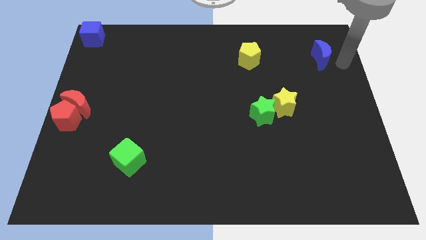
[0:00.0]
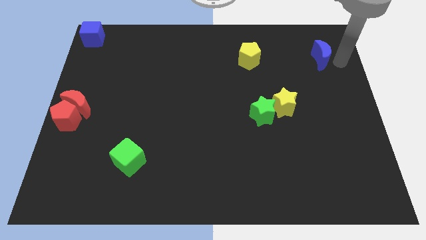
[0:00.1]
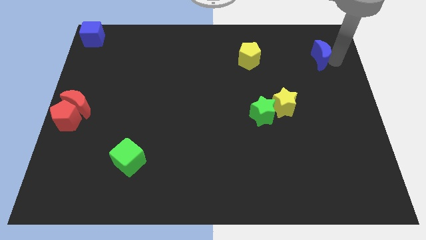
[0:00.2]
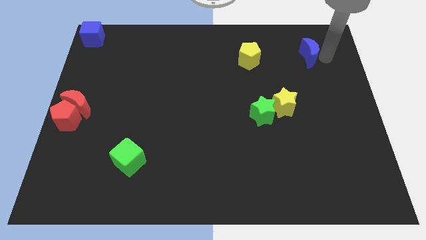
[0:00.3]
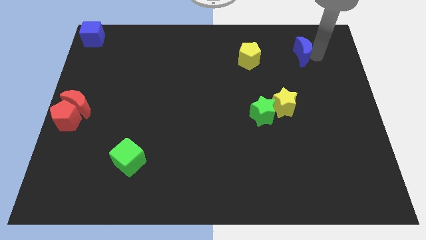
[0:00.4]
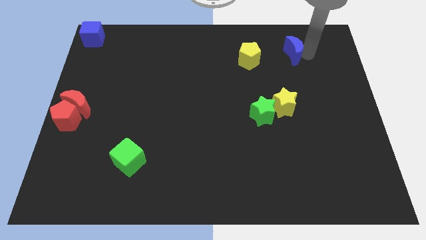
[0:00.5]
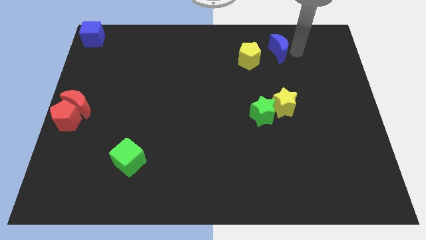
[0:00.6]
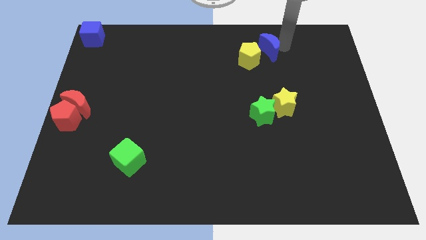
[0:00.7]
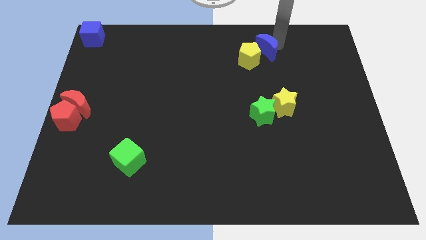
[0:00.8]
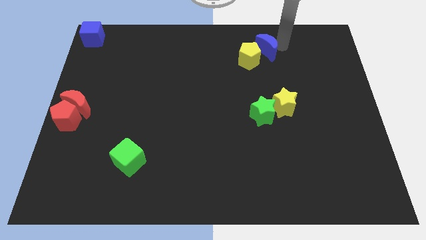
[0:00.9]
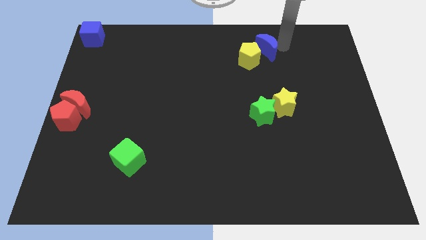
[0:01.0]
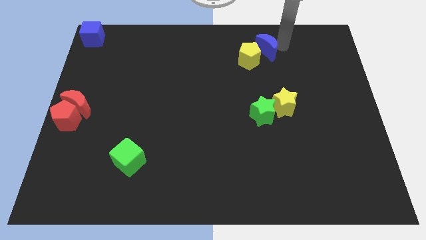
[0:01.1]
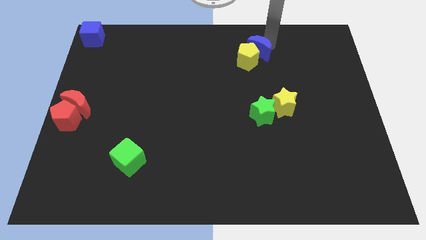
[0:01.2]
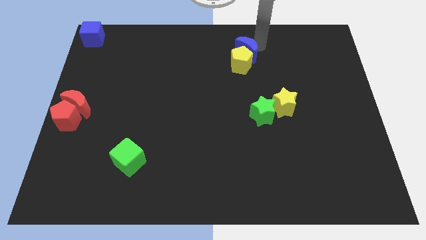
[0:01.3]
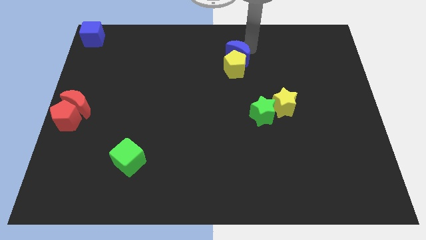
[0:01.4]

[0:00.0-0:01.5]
push the blue moon into the yellow pentagon

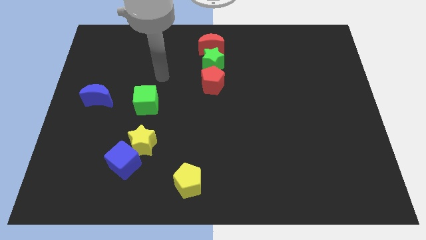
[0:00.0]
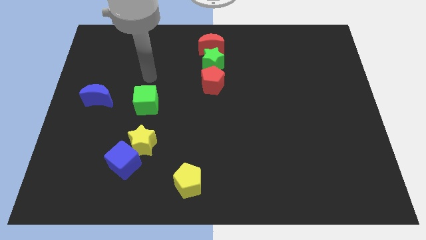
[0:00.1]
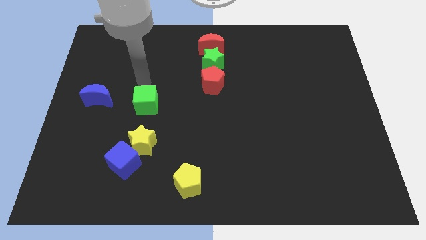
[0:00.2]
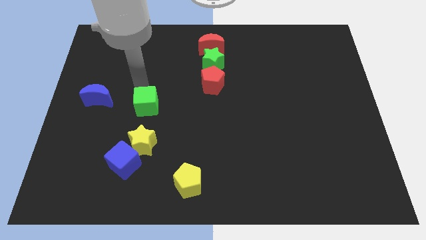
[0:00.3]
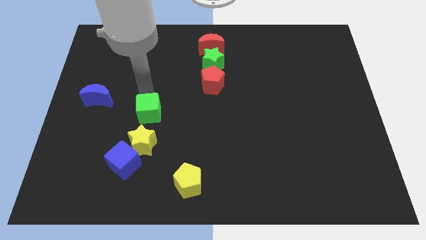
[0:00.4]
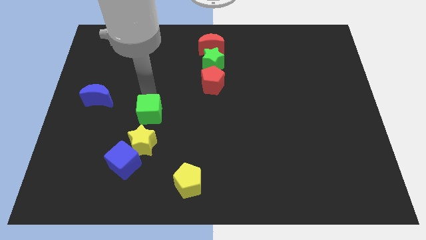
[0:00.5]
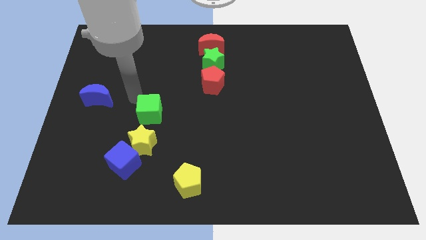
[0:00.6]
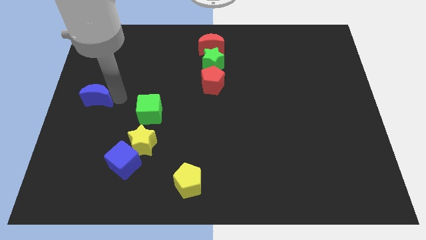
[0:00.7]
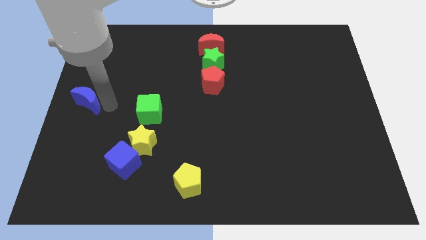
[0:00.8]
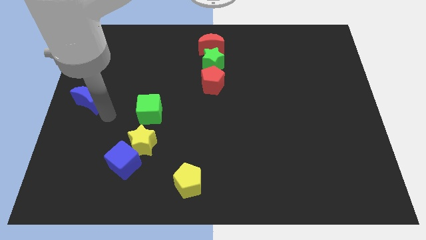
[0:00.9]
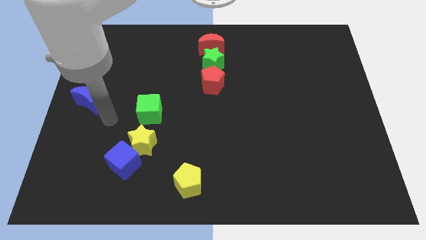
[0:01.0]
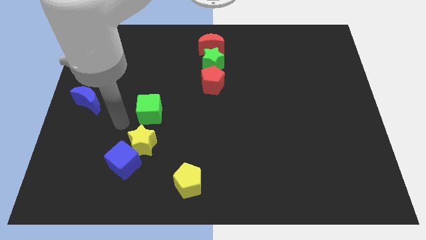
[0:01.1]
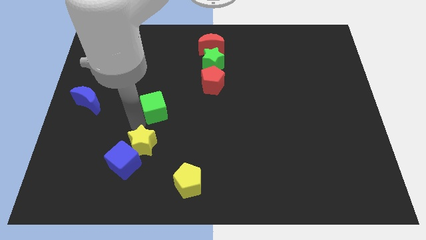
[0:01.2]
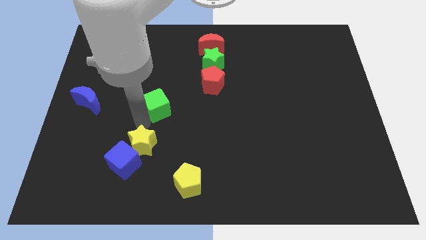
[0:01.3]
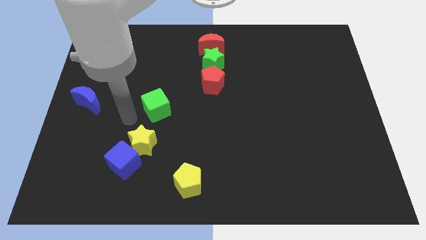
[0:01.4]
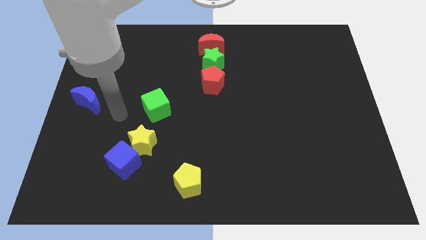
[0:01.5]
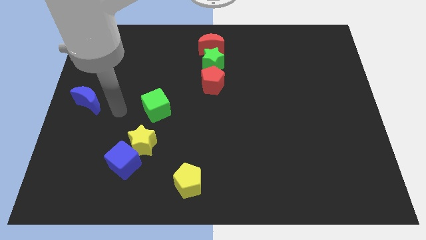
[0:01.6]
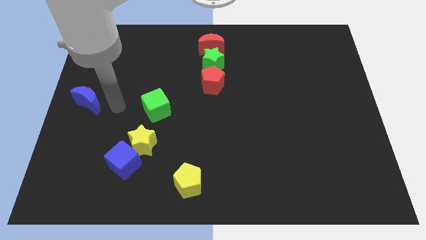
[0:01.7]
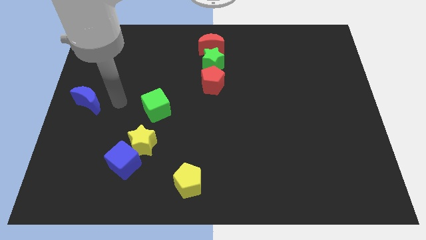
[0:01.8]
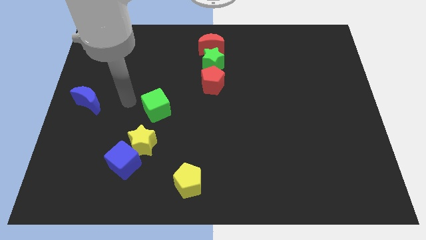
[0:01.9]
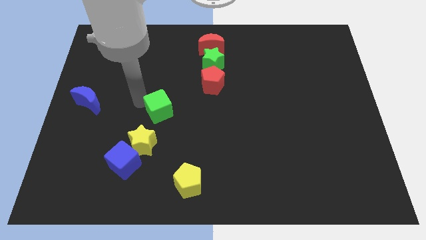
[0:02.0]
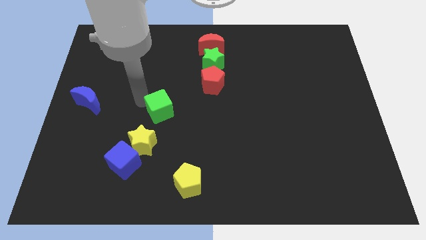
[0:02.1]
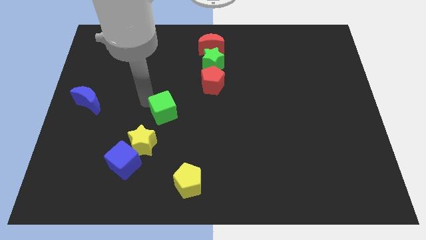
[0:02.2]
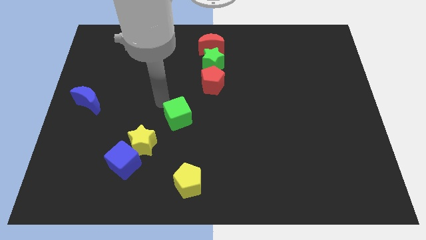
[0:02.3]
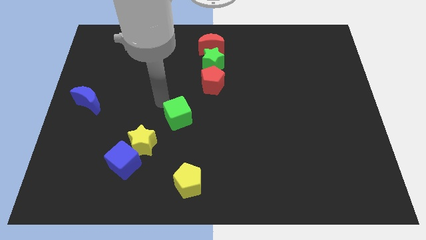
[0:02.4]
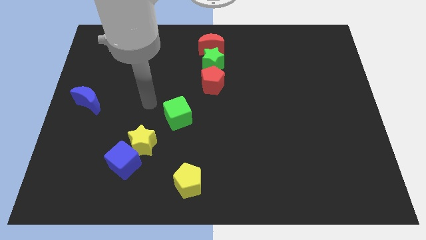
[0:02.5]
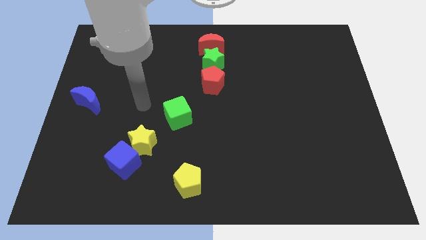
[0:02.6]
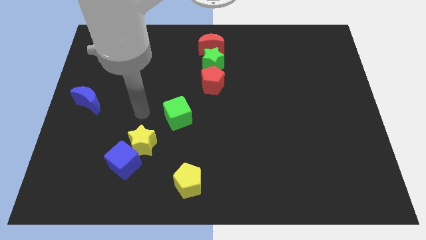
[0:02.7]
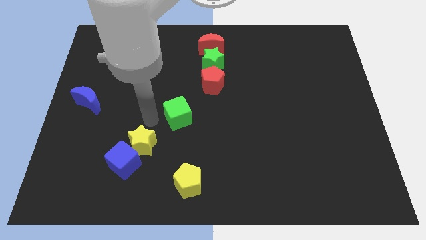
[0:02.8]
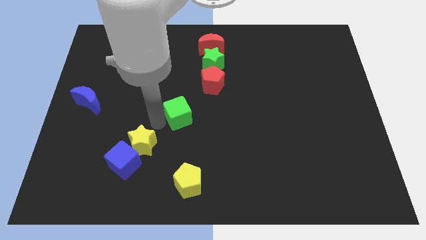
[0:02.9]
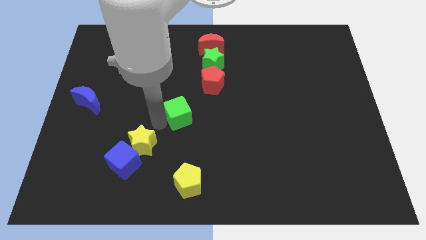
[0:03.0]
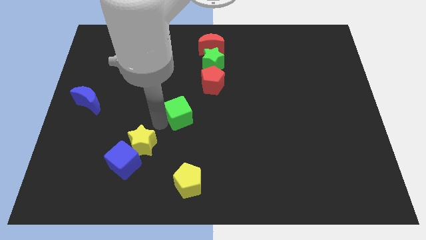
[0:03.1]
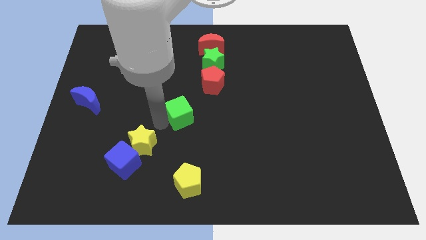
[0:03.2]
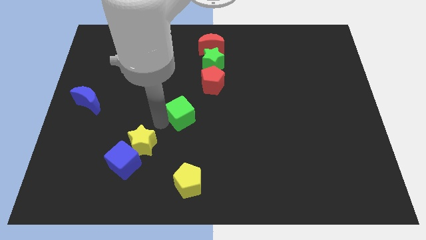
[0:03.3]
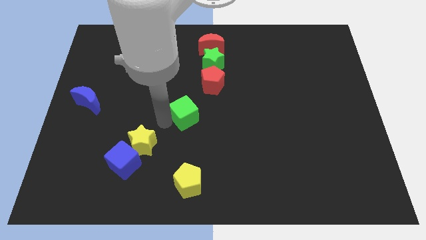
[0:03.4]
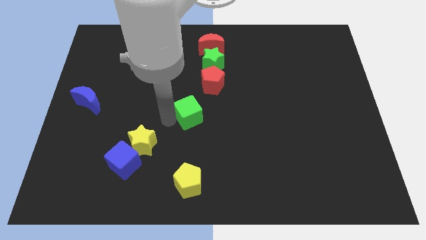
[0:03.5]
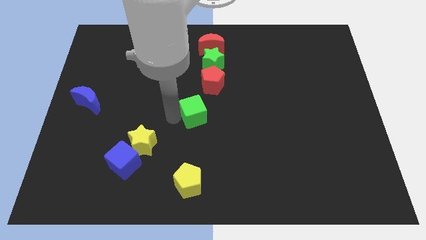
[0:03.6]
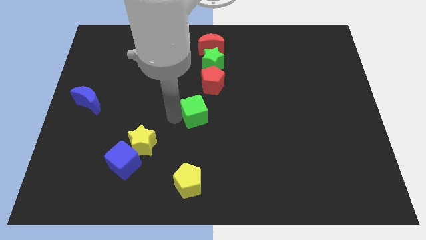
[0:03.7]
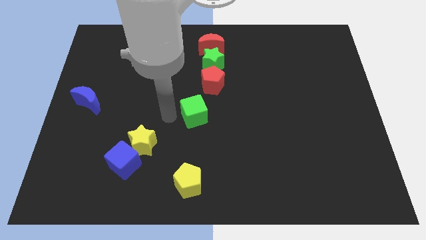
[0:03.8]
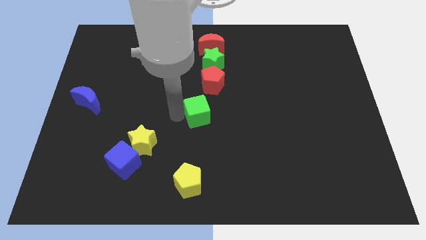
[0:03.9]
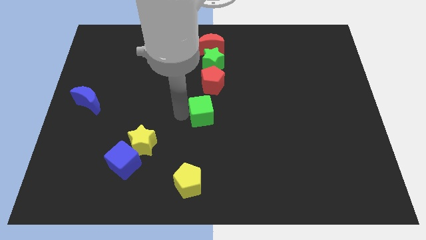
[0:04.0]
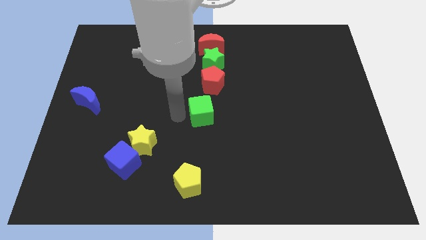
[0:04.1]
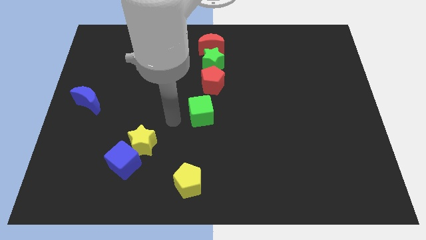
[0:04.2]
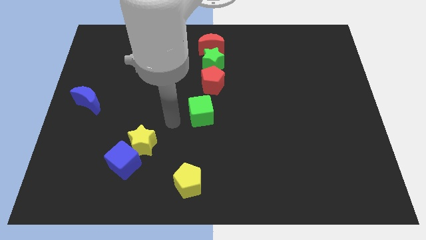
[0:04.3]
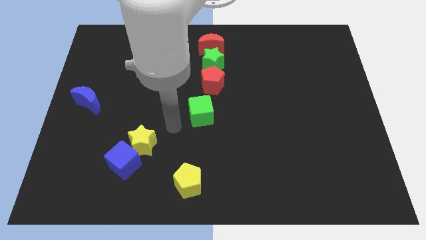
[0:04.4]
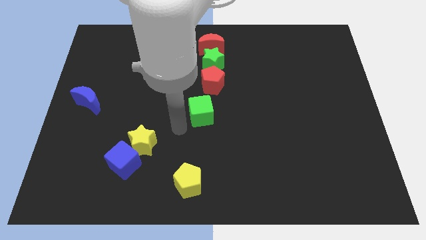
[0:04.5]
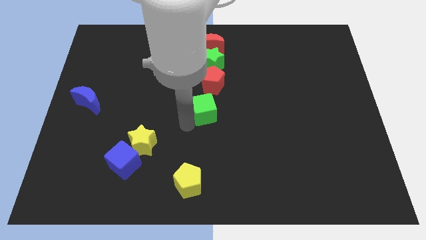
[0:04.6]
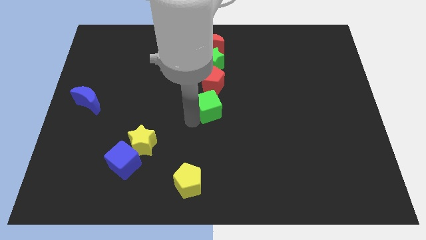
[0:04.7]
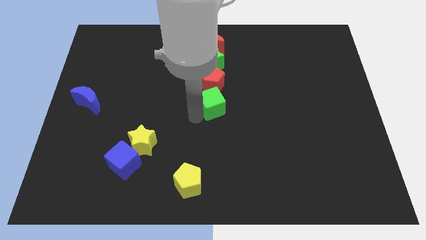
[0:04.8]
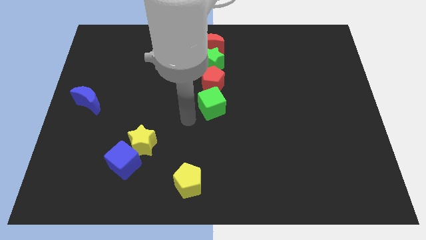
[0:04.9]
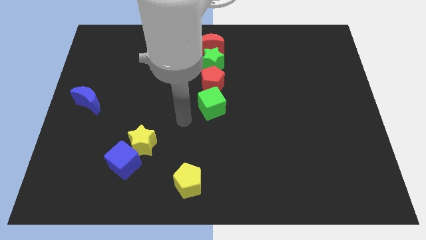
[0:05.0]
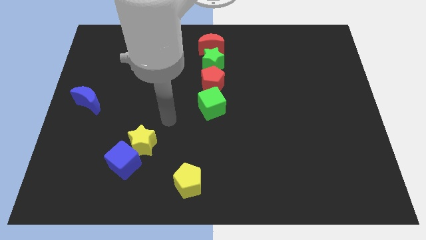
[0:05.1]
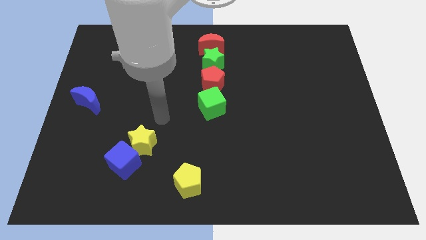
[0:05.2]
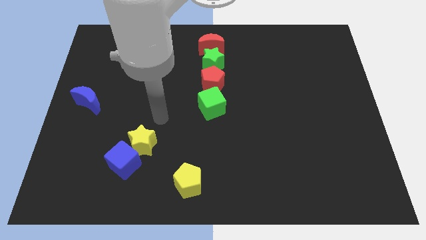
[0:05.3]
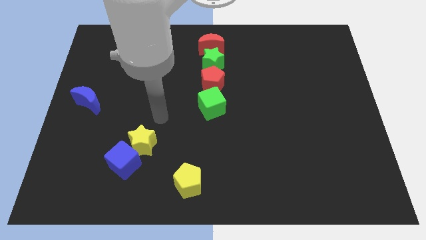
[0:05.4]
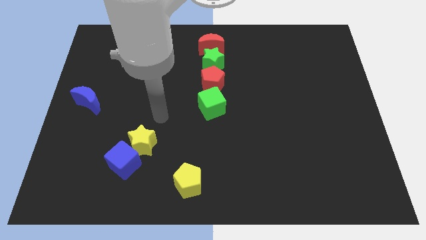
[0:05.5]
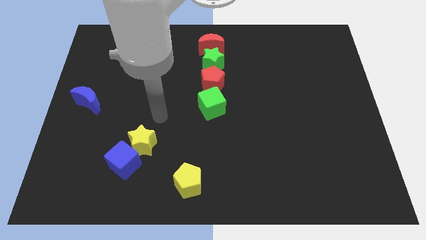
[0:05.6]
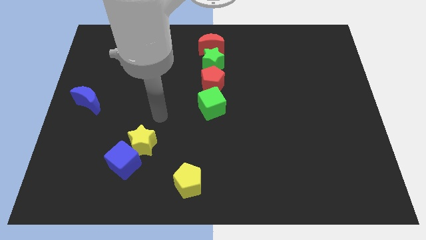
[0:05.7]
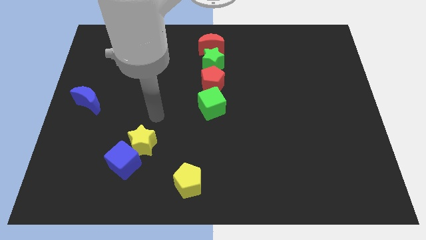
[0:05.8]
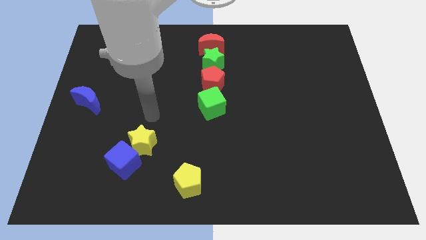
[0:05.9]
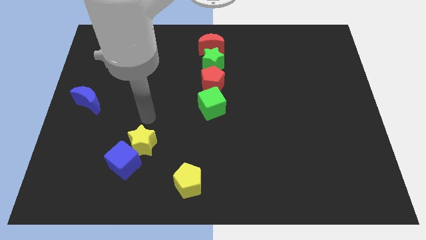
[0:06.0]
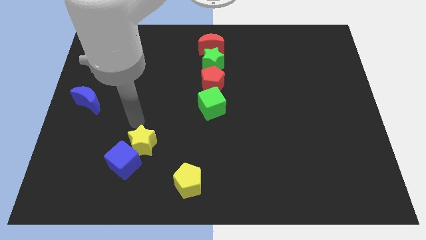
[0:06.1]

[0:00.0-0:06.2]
move the green cube away from the top of the yellow star

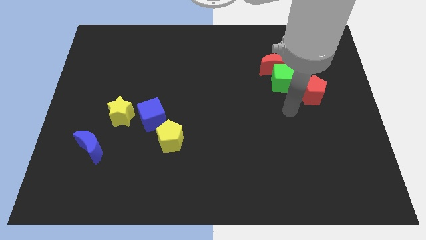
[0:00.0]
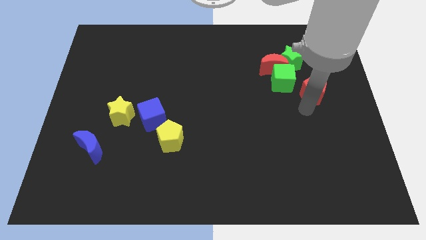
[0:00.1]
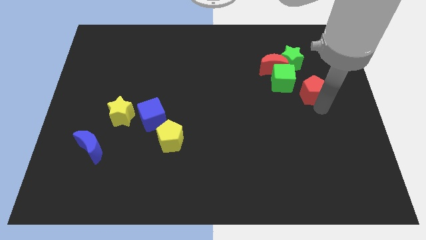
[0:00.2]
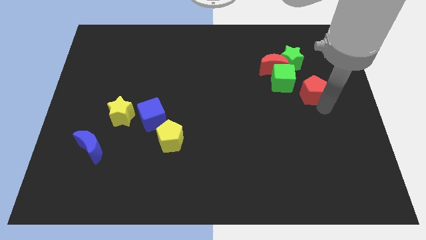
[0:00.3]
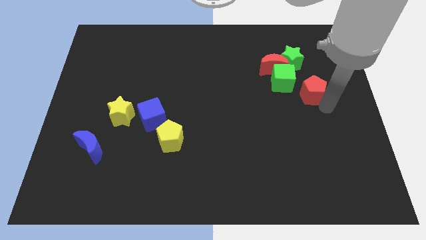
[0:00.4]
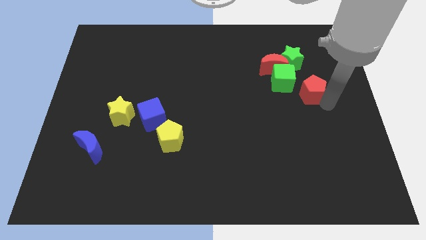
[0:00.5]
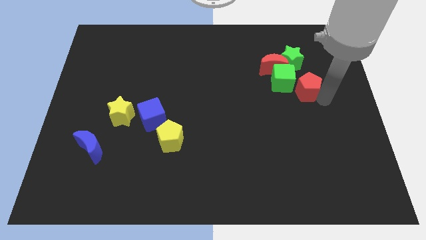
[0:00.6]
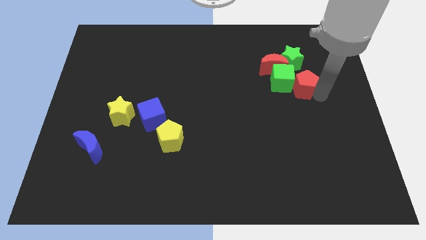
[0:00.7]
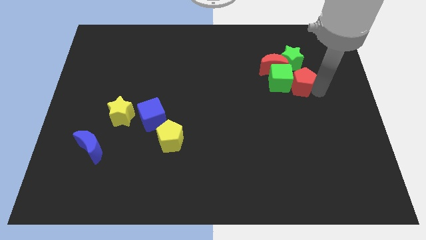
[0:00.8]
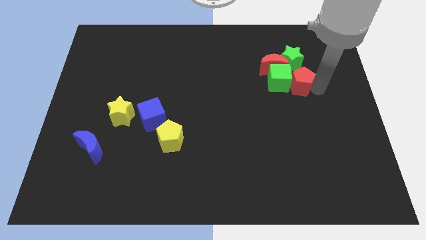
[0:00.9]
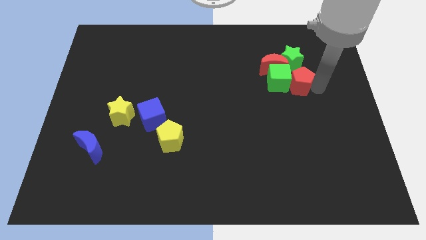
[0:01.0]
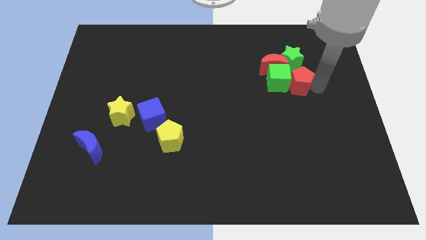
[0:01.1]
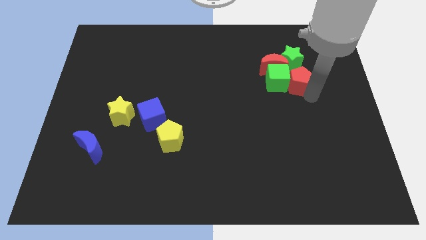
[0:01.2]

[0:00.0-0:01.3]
attach the red pentagon to the green cube
